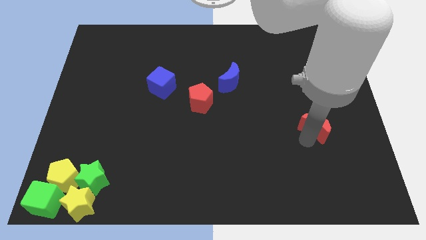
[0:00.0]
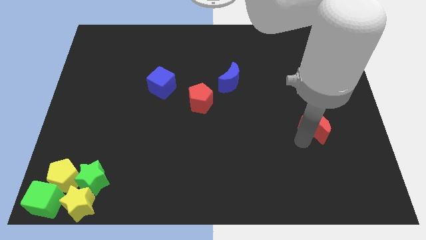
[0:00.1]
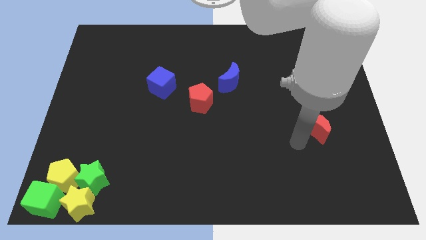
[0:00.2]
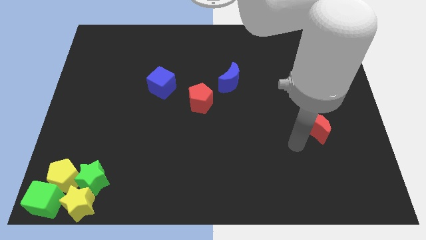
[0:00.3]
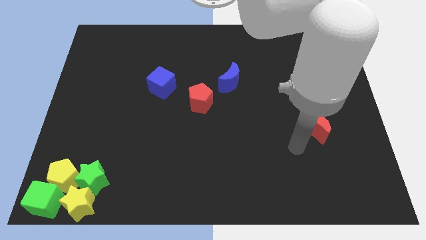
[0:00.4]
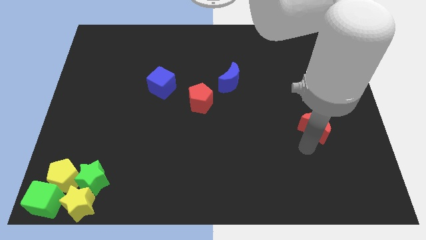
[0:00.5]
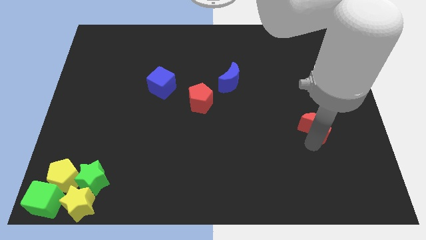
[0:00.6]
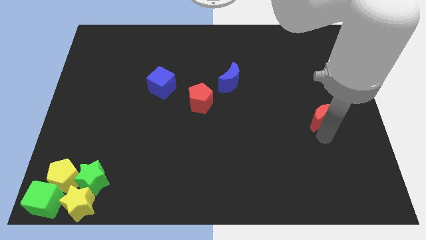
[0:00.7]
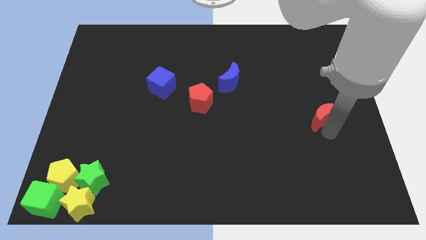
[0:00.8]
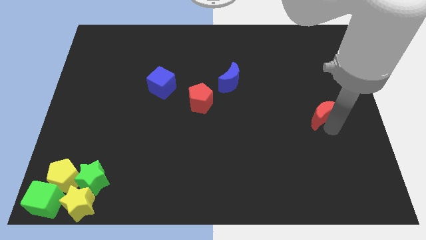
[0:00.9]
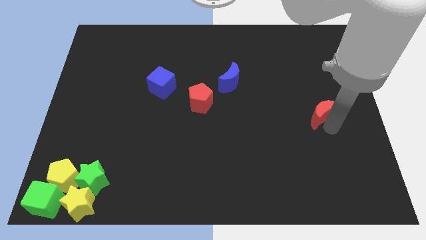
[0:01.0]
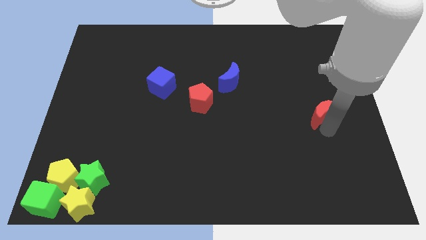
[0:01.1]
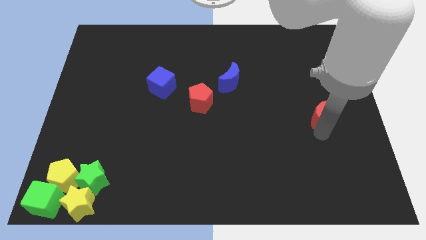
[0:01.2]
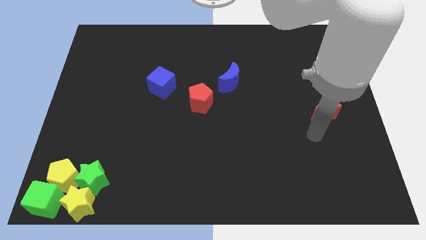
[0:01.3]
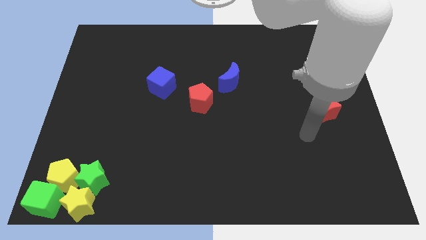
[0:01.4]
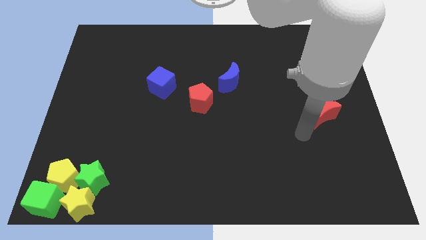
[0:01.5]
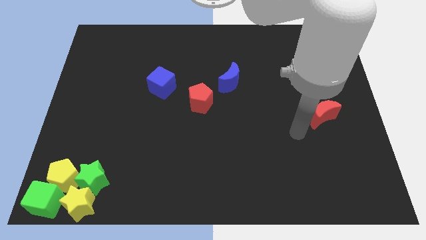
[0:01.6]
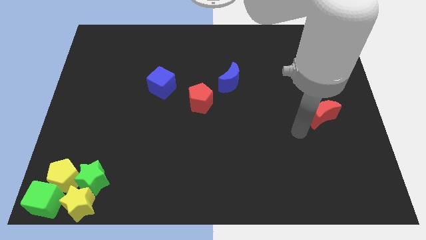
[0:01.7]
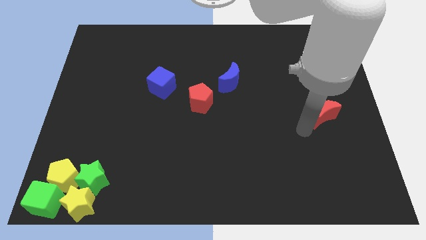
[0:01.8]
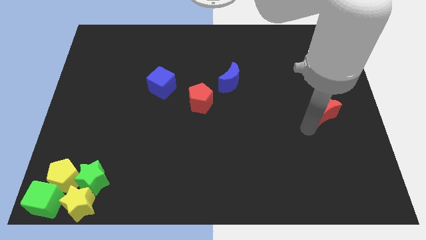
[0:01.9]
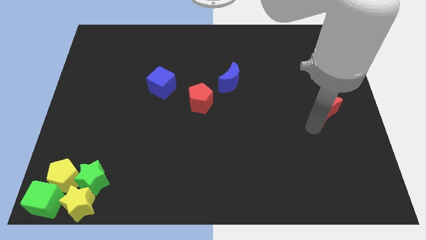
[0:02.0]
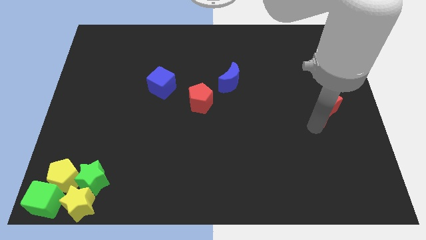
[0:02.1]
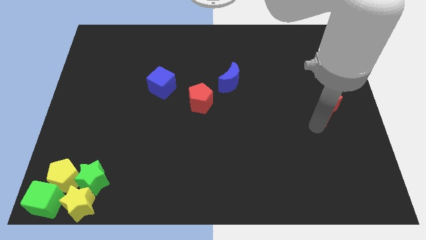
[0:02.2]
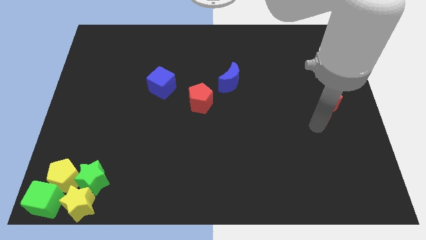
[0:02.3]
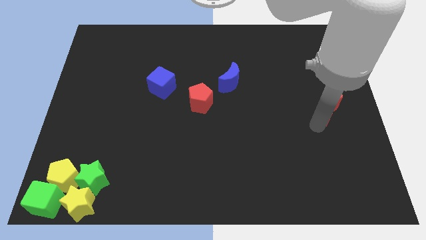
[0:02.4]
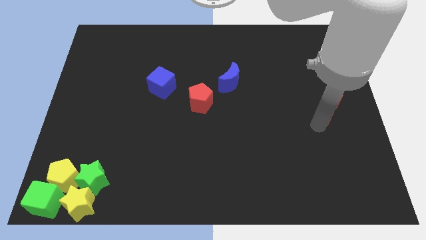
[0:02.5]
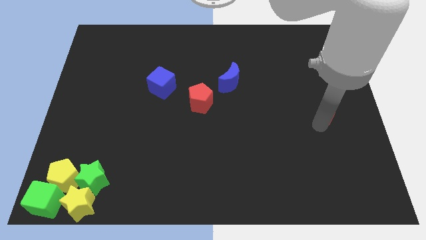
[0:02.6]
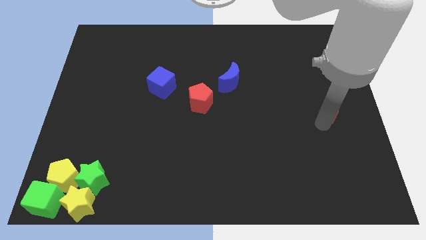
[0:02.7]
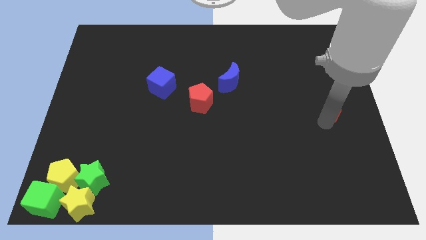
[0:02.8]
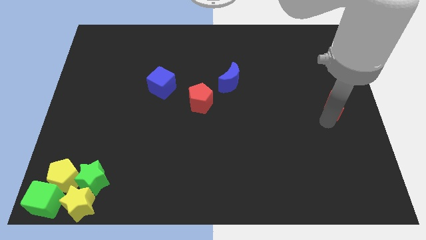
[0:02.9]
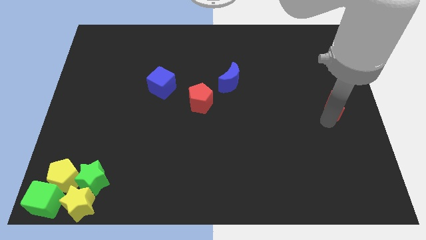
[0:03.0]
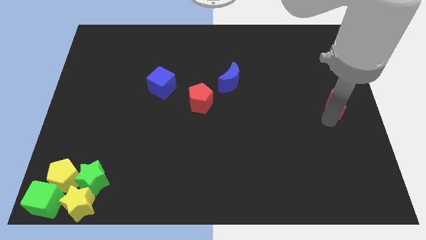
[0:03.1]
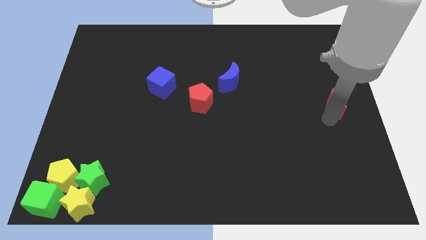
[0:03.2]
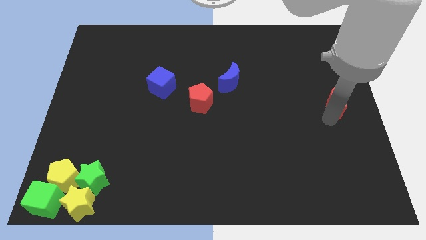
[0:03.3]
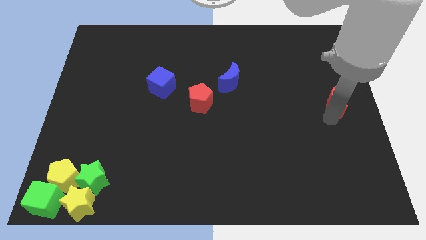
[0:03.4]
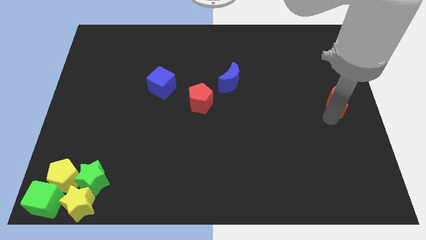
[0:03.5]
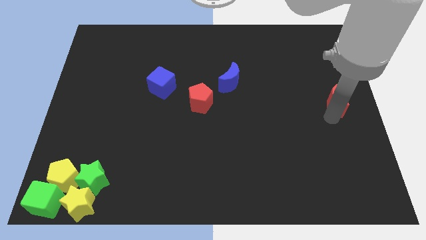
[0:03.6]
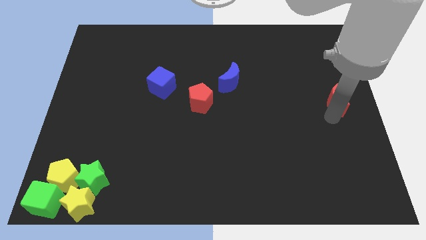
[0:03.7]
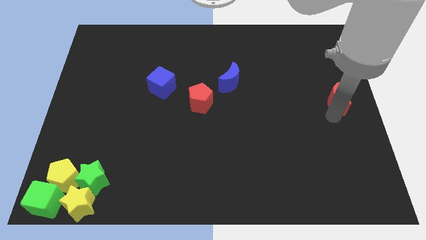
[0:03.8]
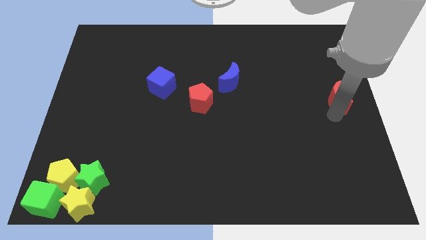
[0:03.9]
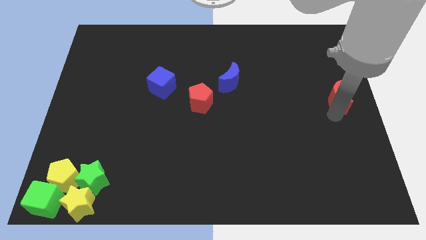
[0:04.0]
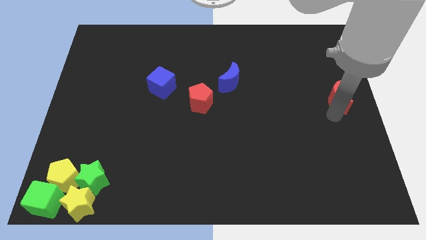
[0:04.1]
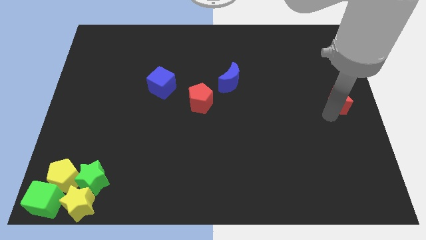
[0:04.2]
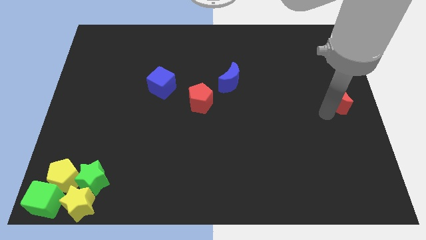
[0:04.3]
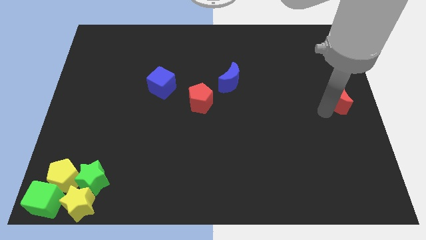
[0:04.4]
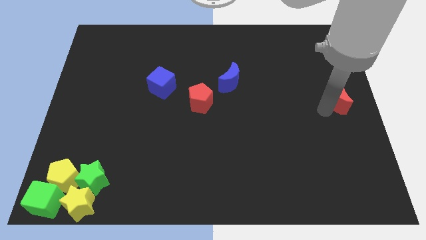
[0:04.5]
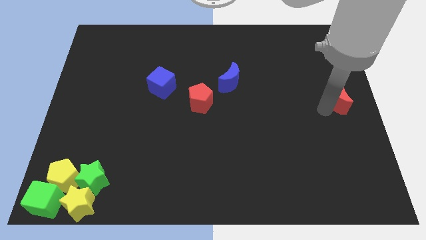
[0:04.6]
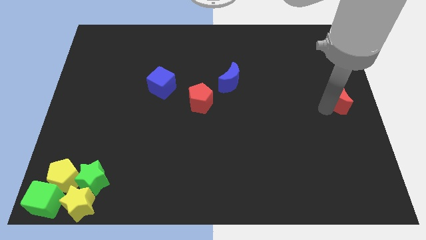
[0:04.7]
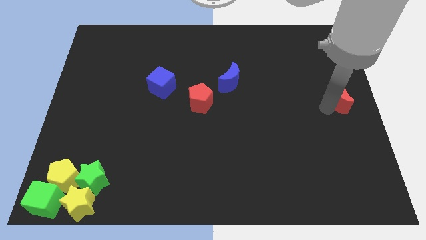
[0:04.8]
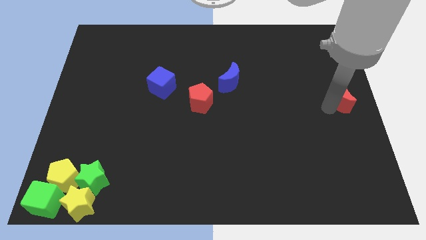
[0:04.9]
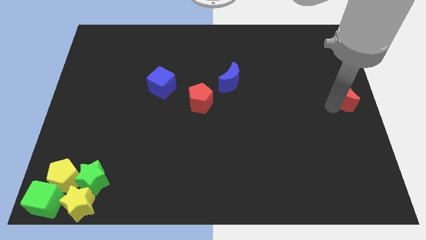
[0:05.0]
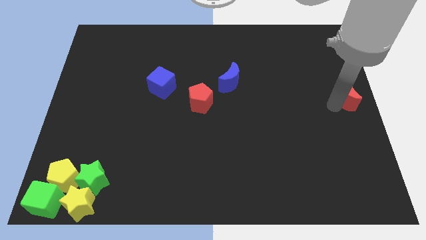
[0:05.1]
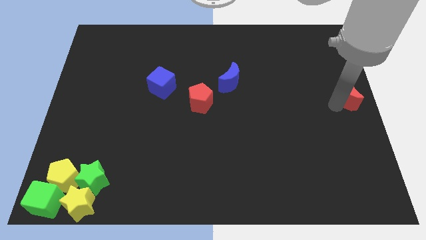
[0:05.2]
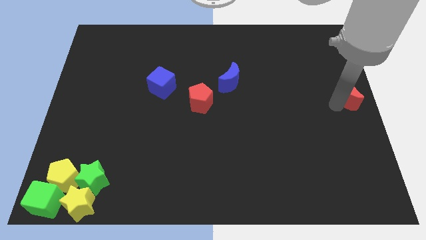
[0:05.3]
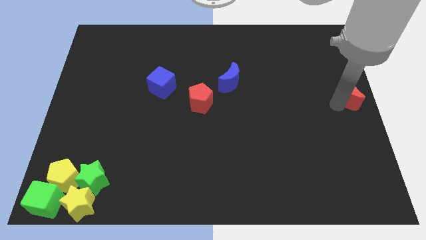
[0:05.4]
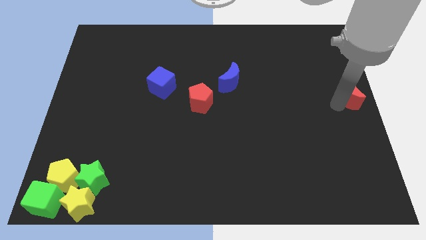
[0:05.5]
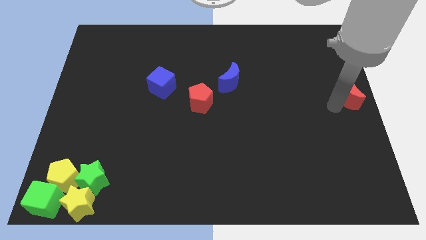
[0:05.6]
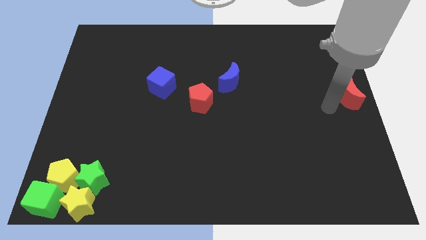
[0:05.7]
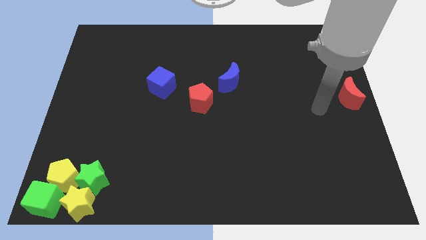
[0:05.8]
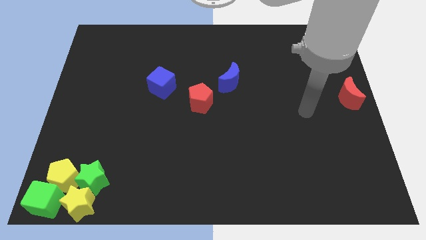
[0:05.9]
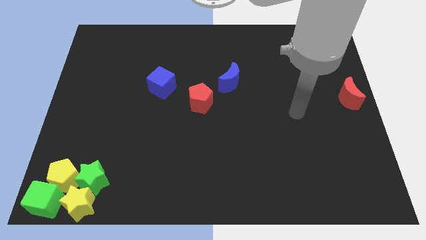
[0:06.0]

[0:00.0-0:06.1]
place red moon in the center right

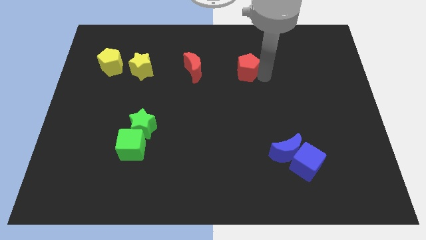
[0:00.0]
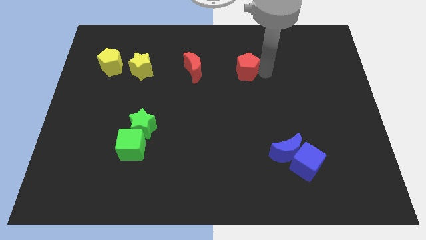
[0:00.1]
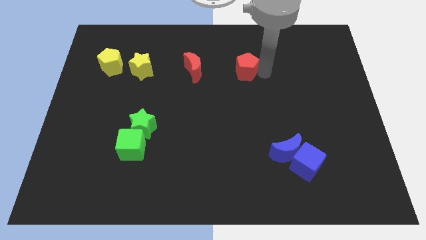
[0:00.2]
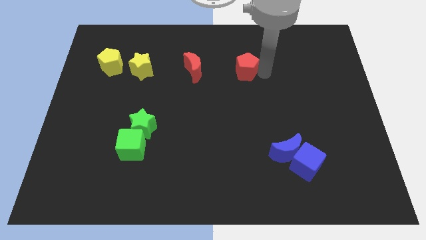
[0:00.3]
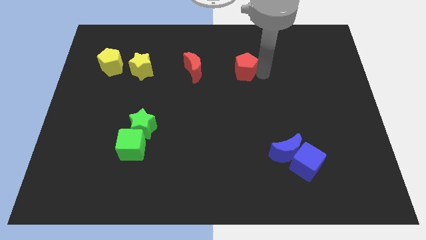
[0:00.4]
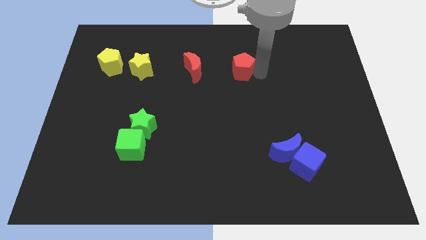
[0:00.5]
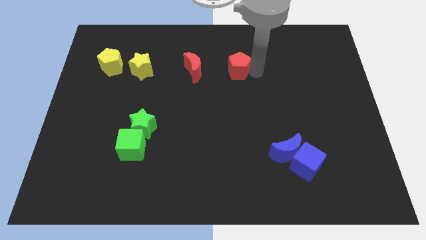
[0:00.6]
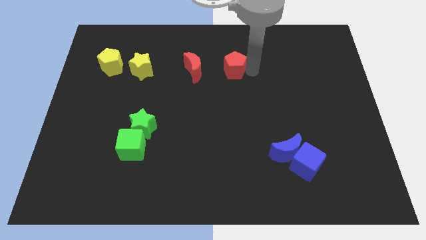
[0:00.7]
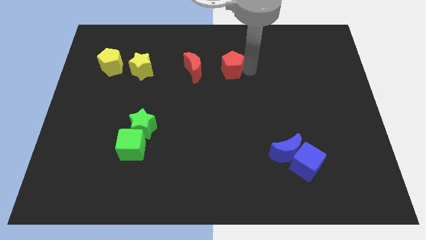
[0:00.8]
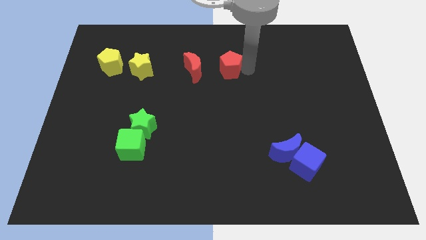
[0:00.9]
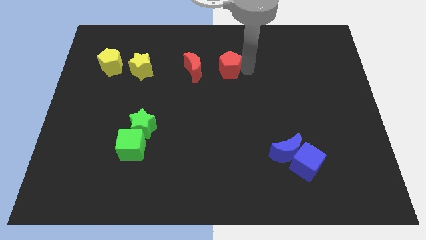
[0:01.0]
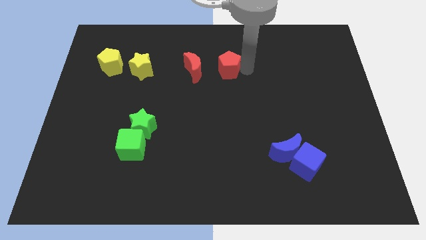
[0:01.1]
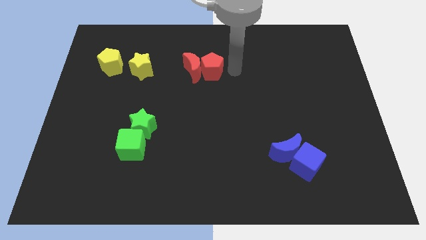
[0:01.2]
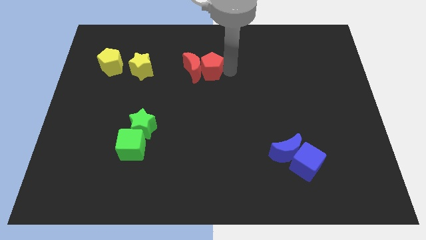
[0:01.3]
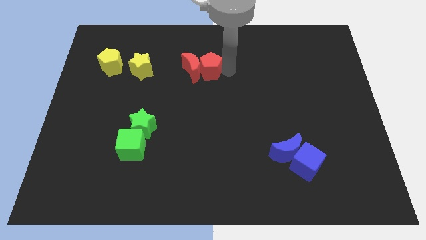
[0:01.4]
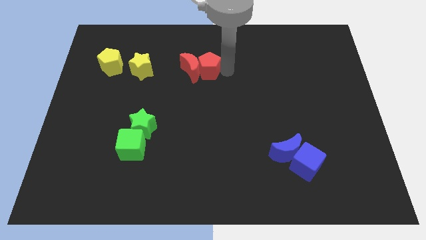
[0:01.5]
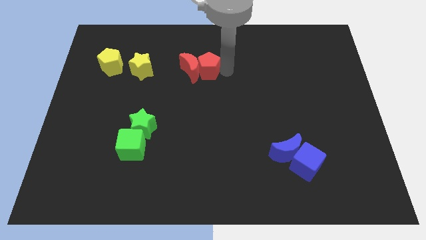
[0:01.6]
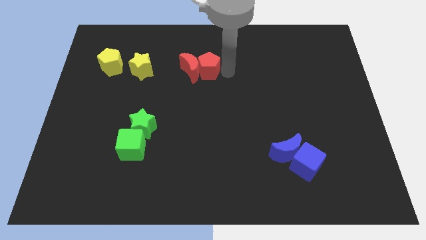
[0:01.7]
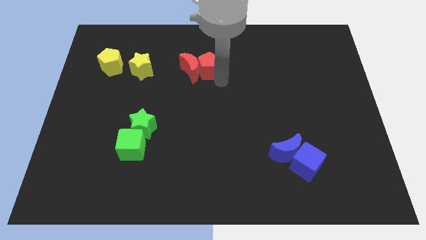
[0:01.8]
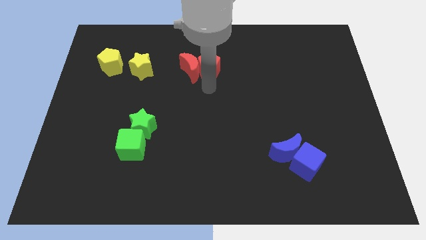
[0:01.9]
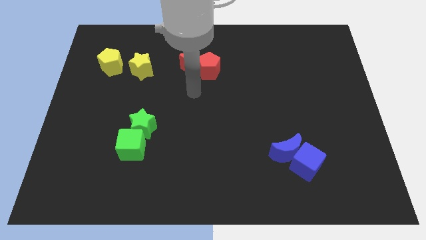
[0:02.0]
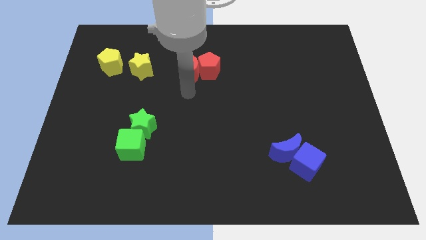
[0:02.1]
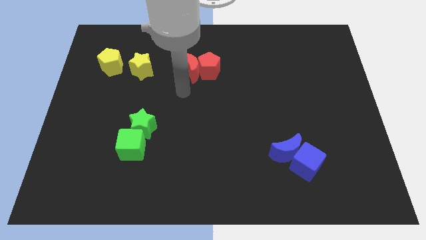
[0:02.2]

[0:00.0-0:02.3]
push the red pentagon into the red crescent

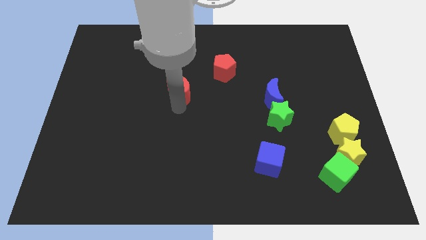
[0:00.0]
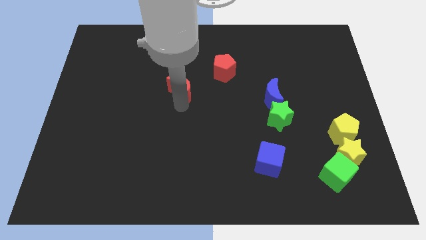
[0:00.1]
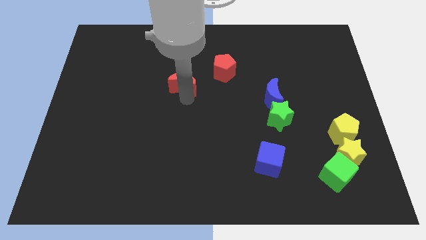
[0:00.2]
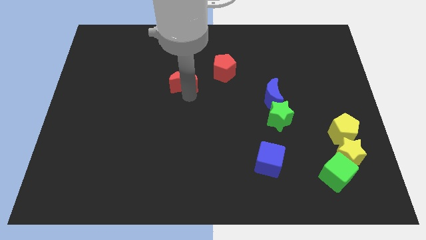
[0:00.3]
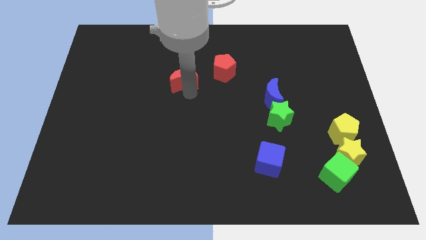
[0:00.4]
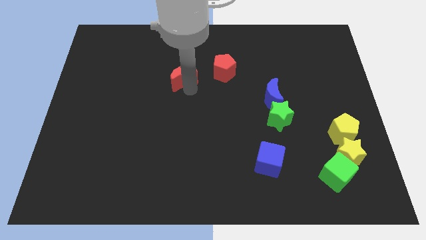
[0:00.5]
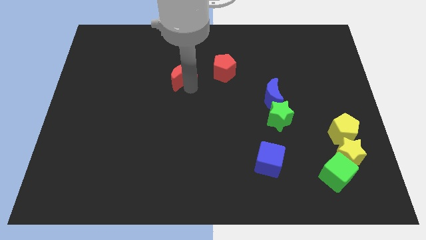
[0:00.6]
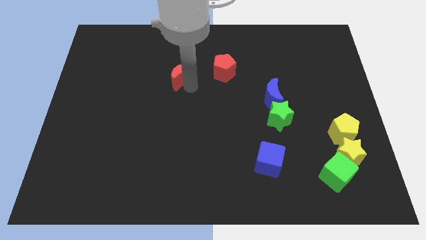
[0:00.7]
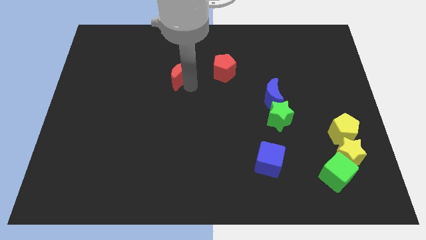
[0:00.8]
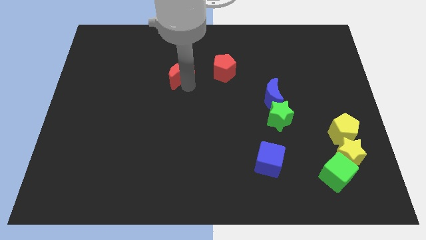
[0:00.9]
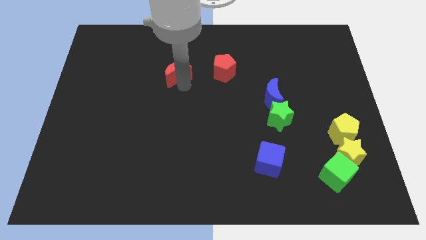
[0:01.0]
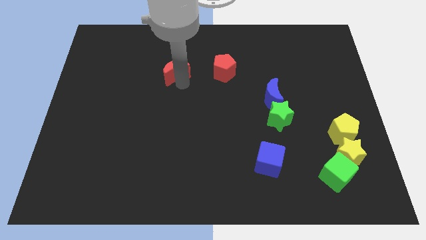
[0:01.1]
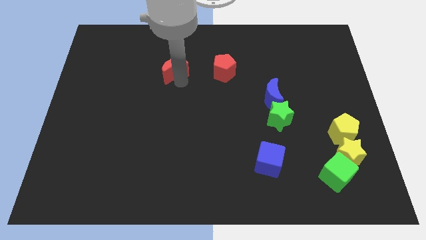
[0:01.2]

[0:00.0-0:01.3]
place the red moon to the left of the red pentagon
